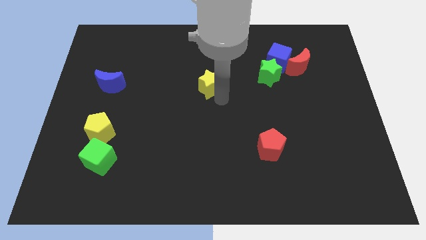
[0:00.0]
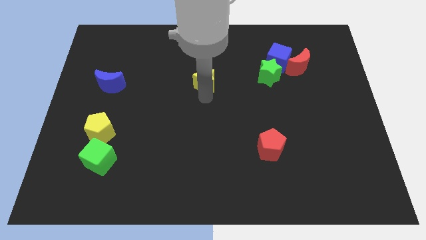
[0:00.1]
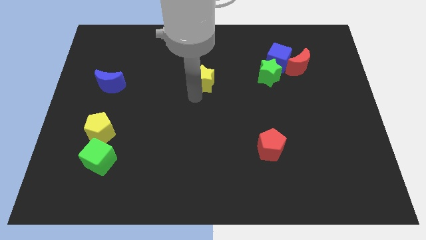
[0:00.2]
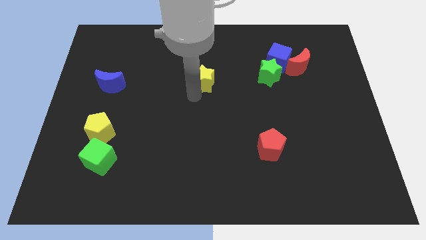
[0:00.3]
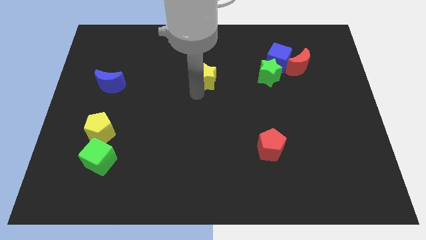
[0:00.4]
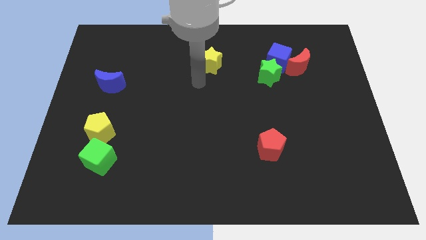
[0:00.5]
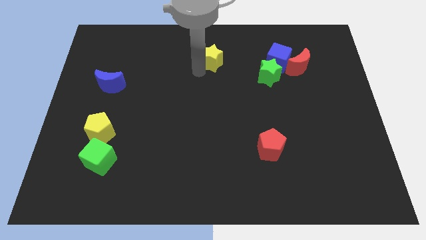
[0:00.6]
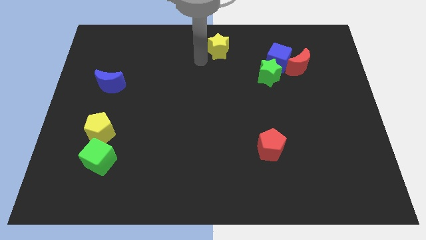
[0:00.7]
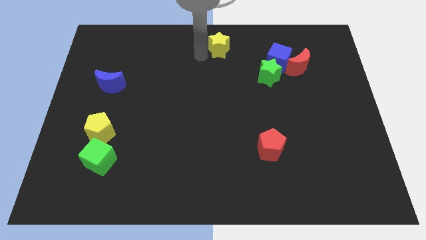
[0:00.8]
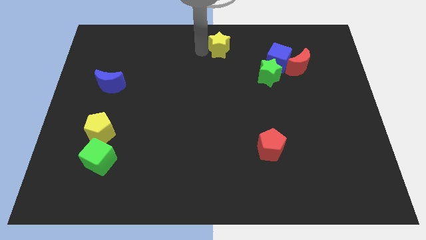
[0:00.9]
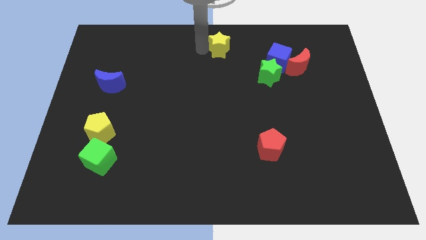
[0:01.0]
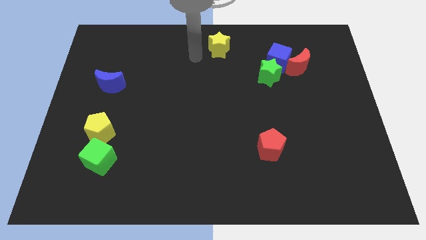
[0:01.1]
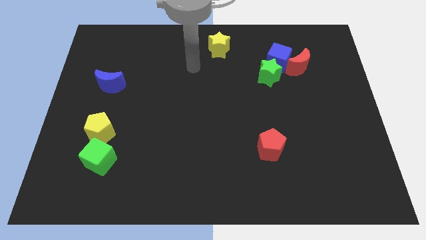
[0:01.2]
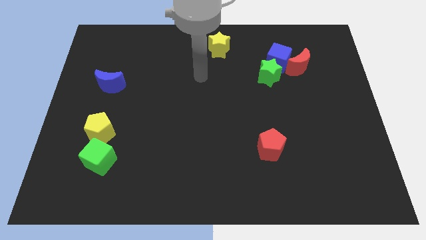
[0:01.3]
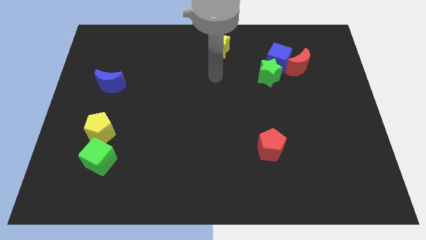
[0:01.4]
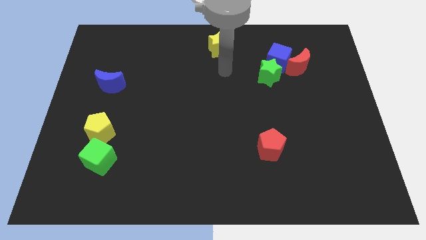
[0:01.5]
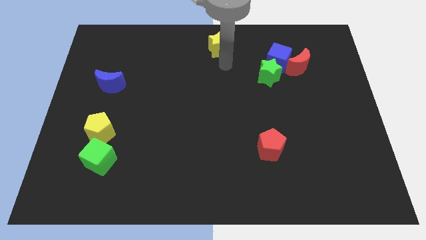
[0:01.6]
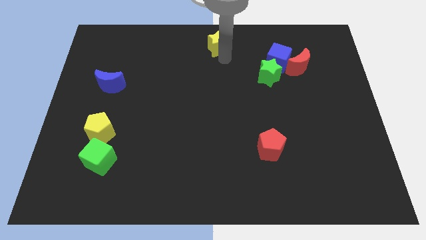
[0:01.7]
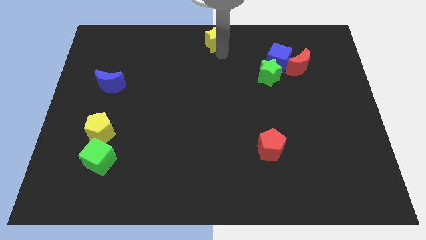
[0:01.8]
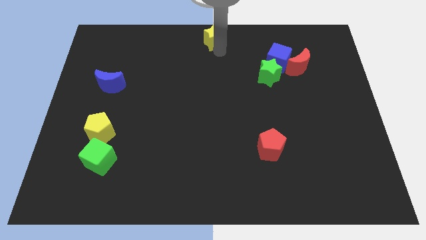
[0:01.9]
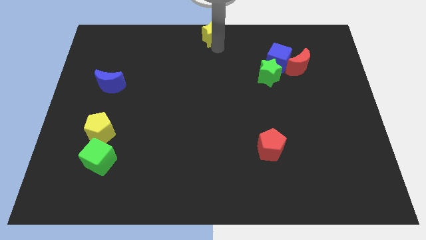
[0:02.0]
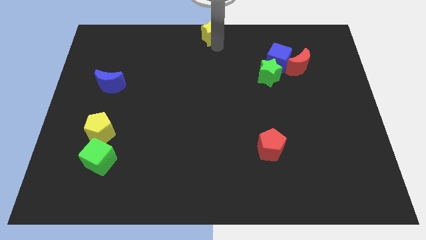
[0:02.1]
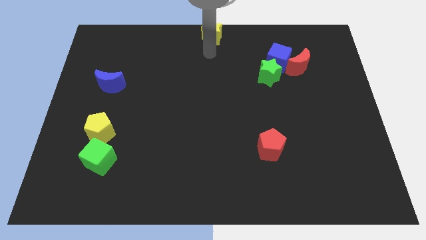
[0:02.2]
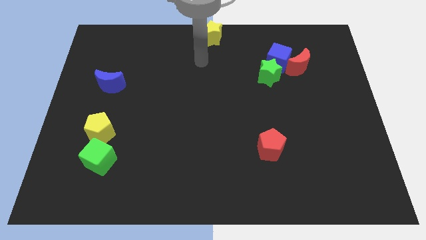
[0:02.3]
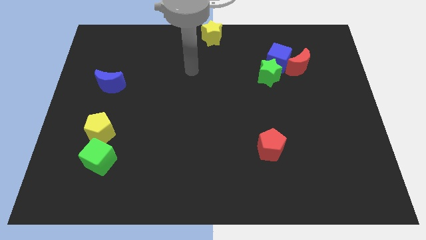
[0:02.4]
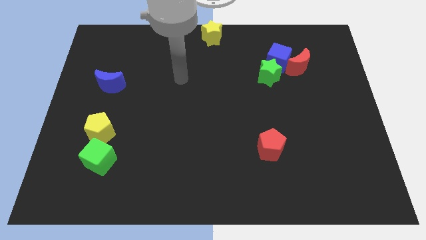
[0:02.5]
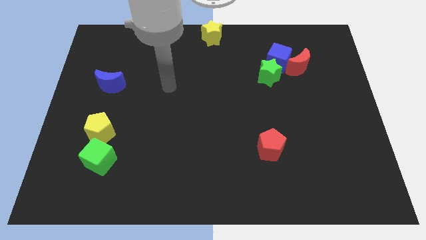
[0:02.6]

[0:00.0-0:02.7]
move yellow star at center top

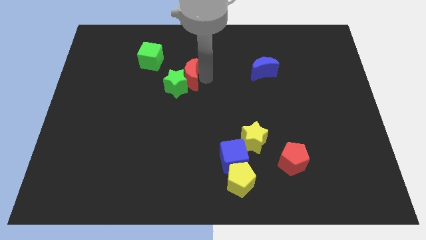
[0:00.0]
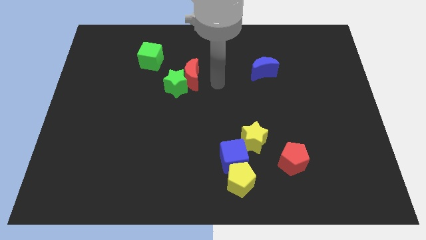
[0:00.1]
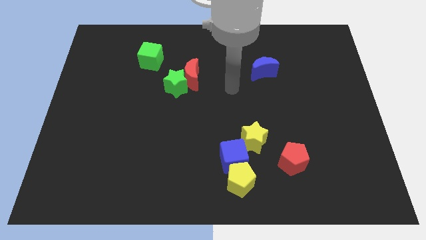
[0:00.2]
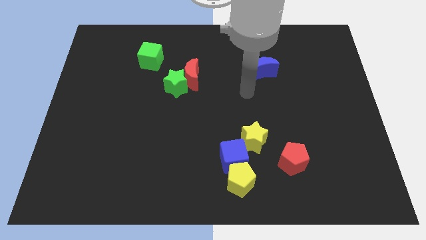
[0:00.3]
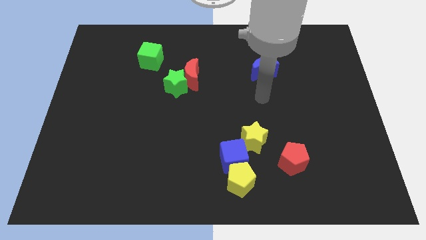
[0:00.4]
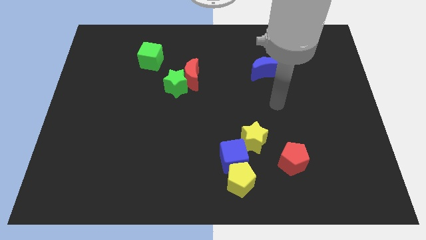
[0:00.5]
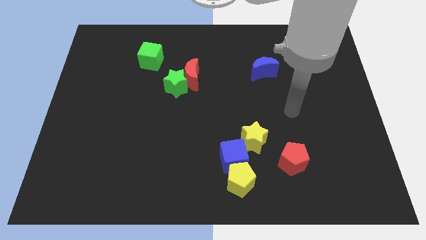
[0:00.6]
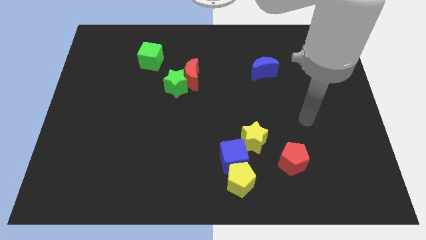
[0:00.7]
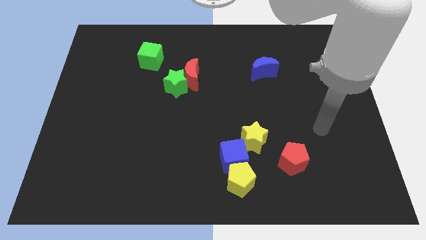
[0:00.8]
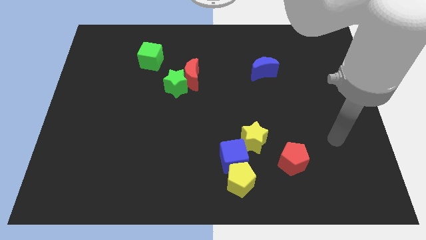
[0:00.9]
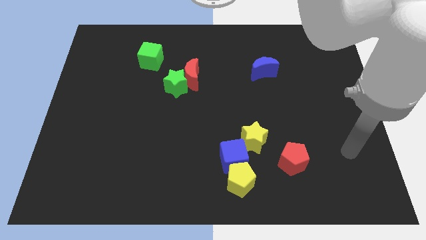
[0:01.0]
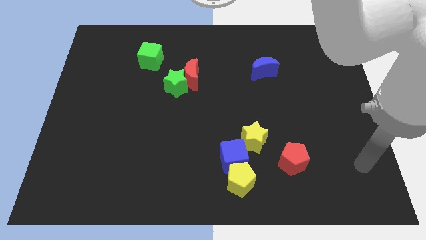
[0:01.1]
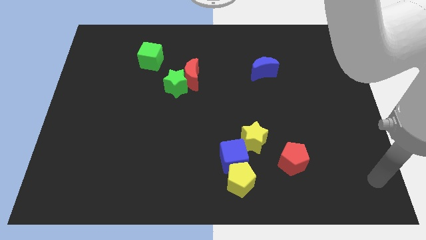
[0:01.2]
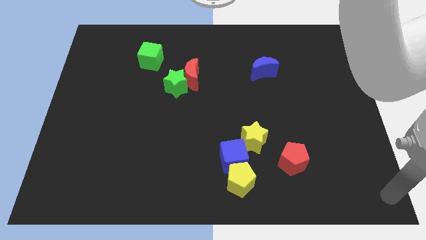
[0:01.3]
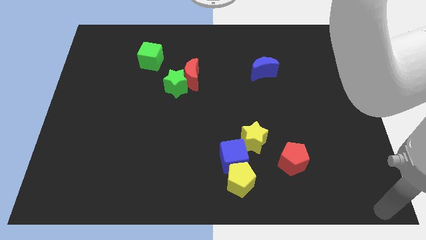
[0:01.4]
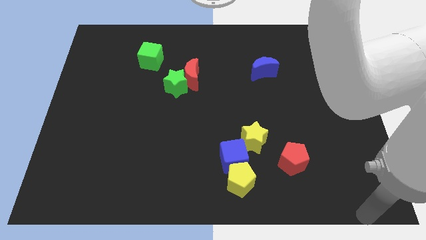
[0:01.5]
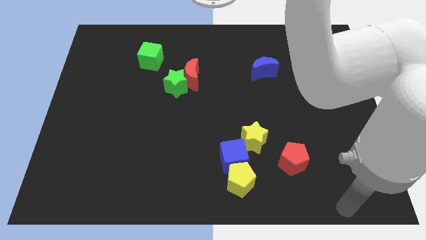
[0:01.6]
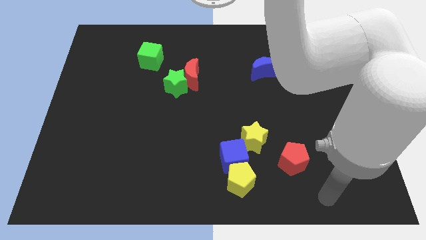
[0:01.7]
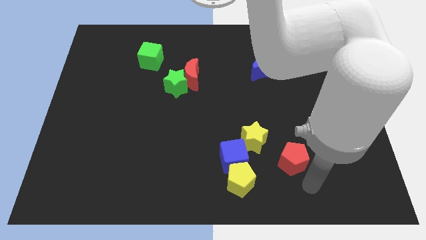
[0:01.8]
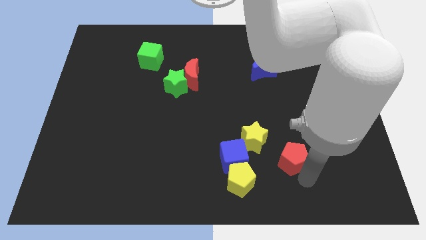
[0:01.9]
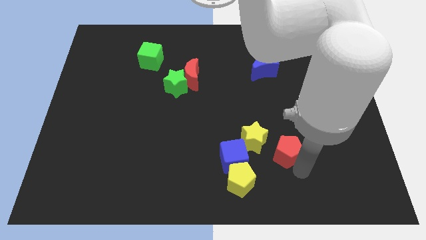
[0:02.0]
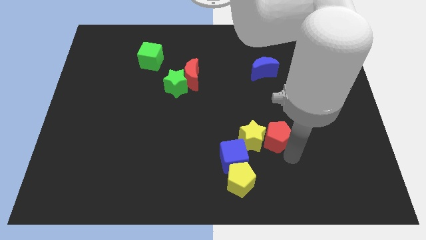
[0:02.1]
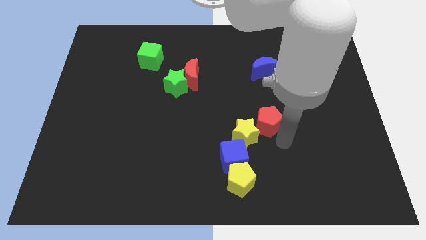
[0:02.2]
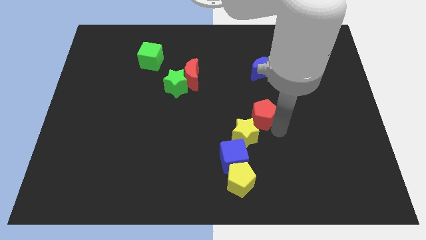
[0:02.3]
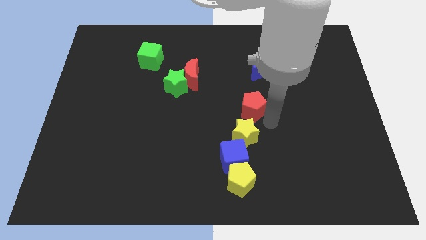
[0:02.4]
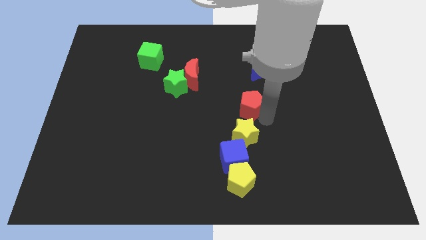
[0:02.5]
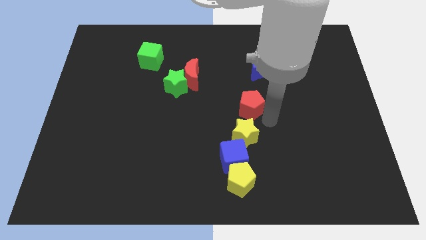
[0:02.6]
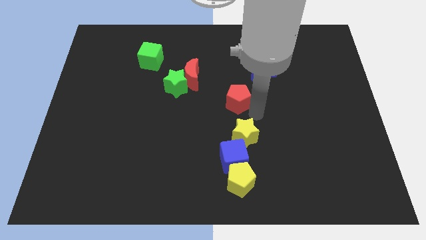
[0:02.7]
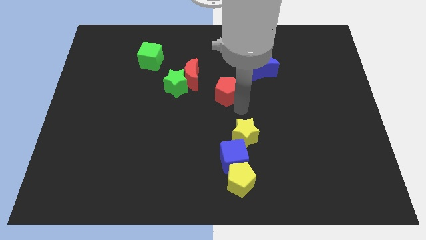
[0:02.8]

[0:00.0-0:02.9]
move the red pentagon to the top of the yellow star

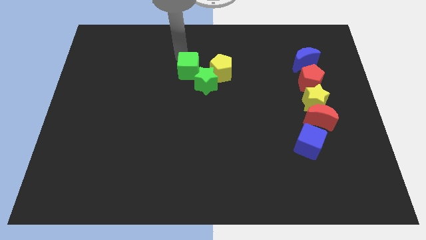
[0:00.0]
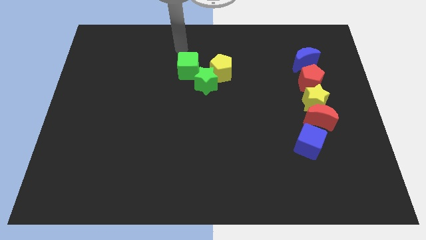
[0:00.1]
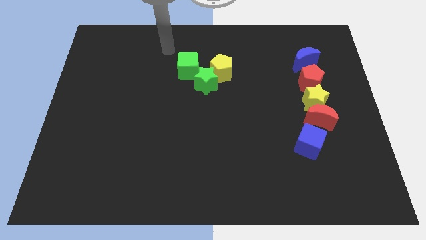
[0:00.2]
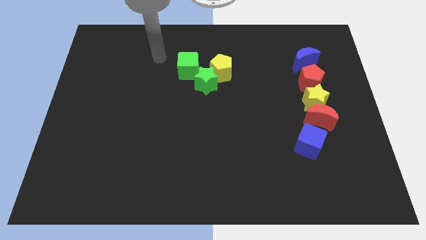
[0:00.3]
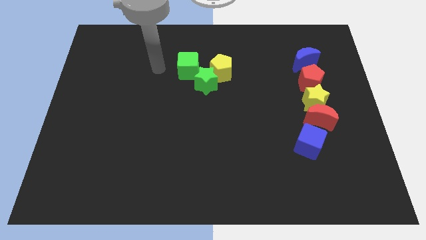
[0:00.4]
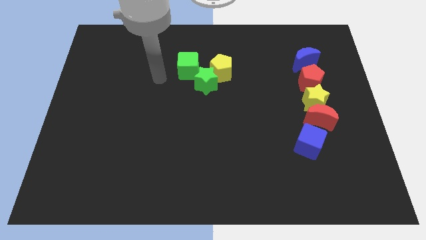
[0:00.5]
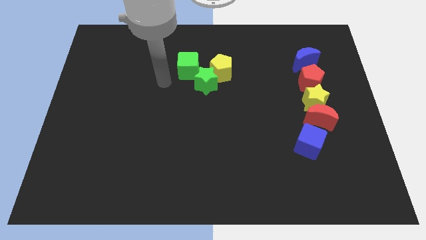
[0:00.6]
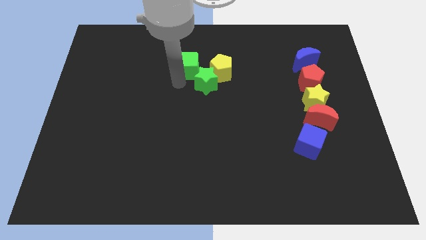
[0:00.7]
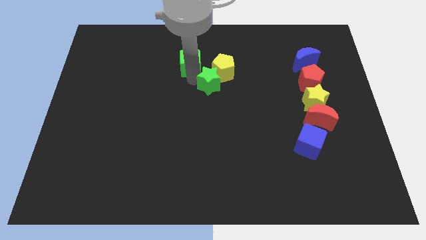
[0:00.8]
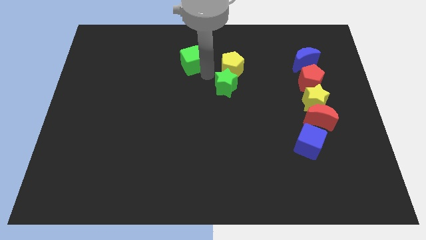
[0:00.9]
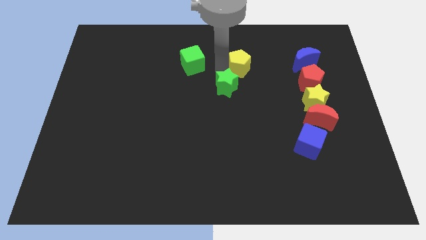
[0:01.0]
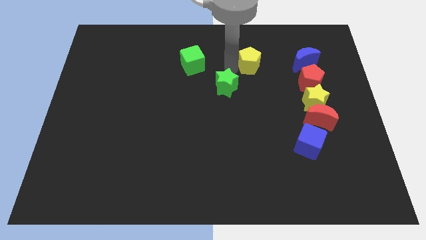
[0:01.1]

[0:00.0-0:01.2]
separate green cube green star and yellow pentagon

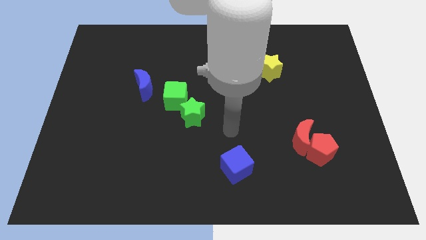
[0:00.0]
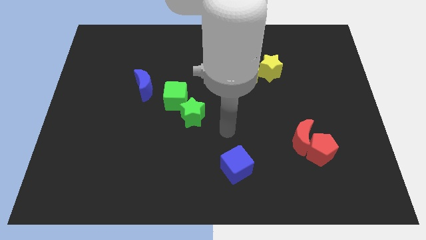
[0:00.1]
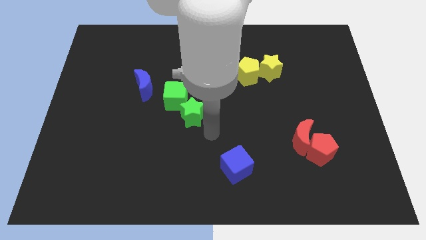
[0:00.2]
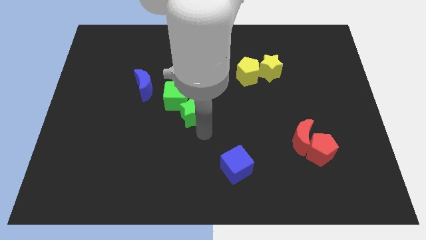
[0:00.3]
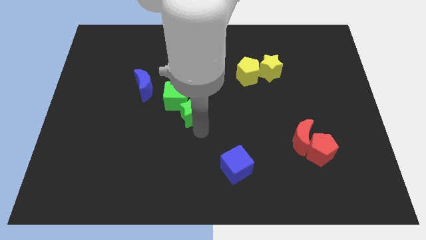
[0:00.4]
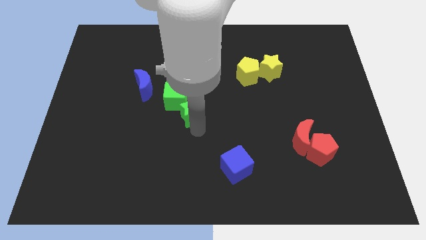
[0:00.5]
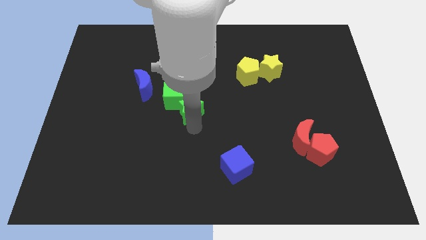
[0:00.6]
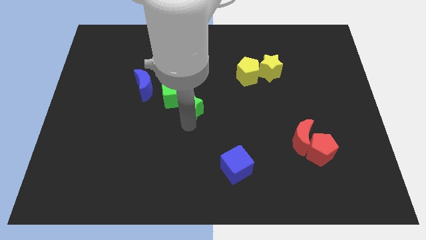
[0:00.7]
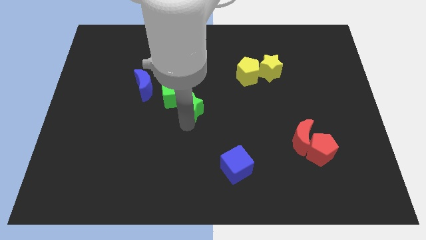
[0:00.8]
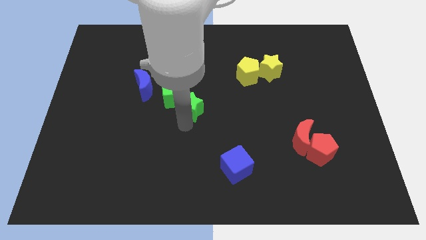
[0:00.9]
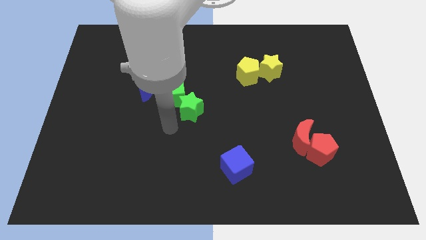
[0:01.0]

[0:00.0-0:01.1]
place your arm below the green cube

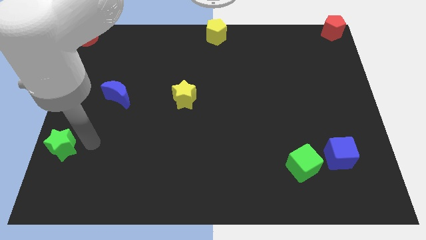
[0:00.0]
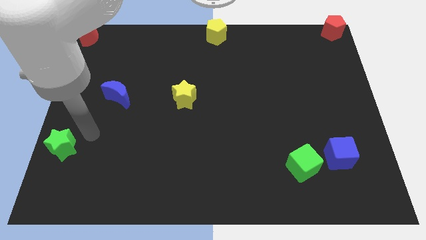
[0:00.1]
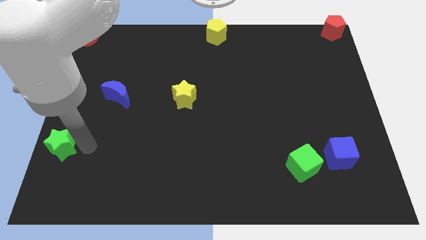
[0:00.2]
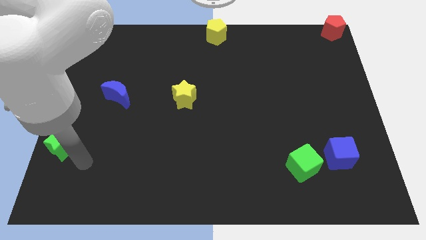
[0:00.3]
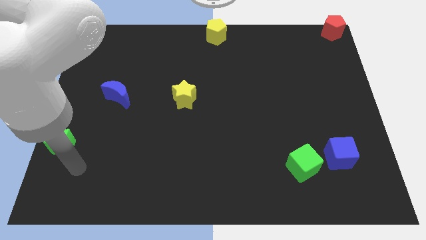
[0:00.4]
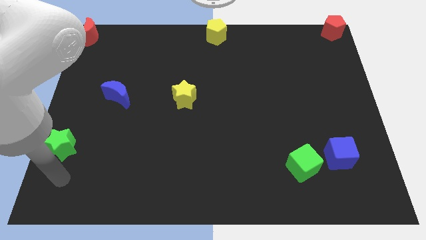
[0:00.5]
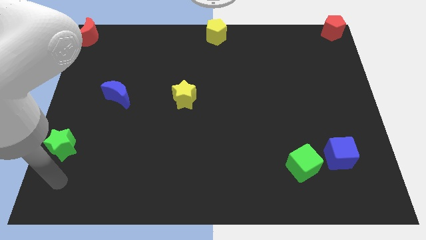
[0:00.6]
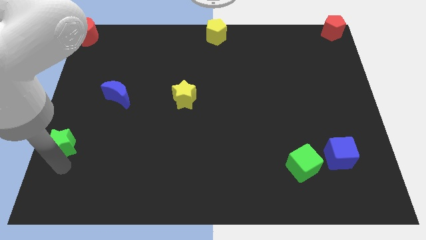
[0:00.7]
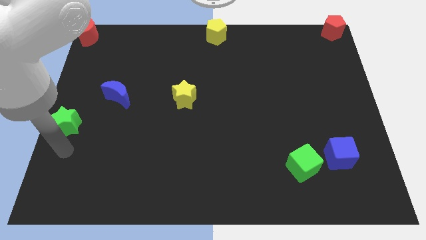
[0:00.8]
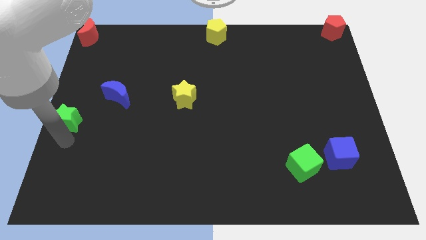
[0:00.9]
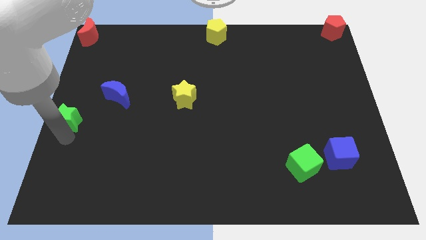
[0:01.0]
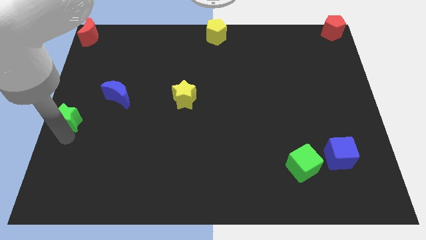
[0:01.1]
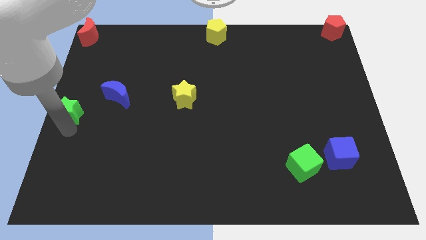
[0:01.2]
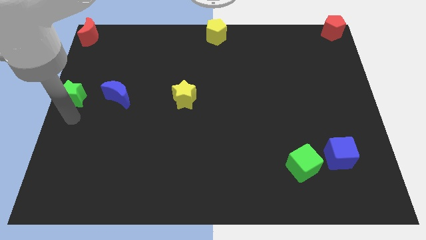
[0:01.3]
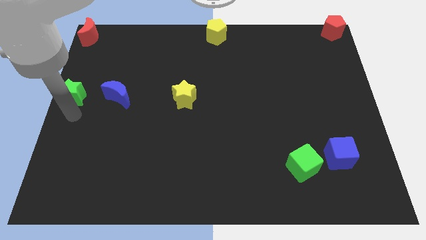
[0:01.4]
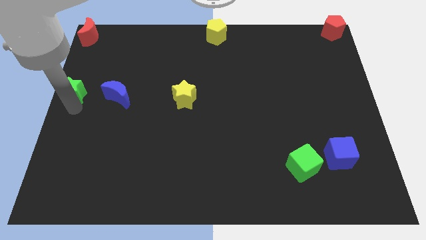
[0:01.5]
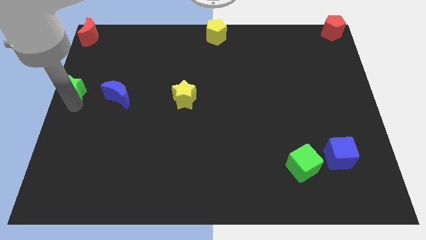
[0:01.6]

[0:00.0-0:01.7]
put the green star to the left side of blue moon
